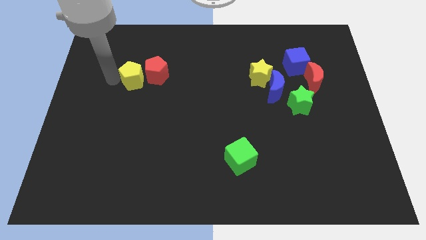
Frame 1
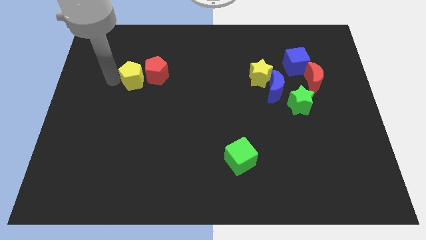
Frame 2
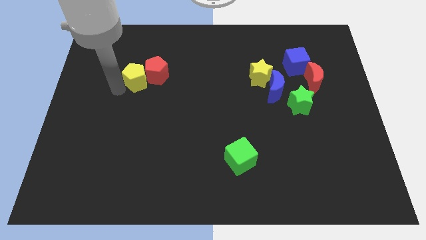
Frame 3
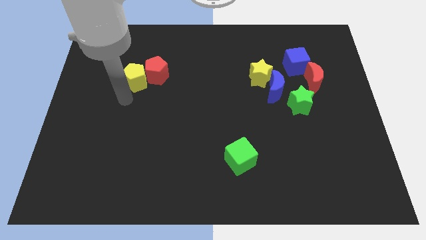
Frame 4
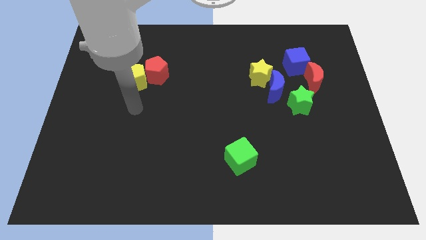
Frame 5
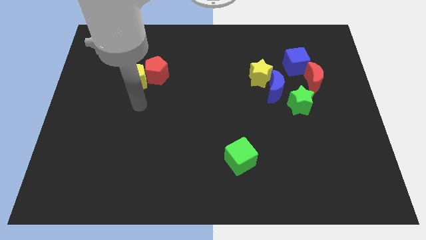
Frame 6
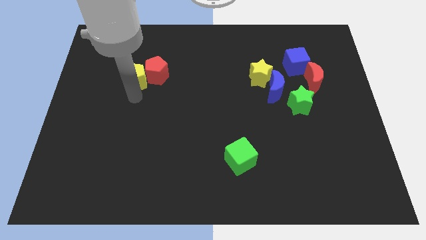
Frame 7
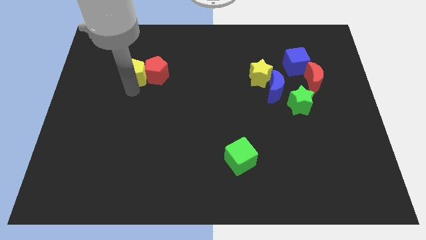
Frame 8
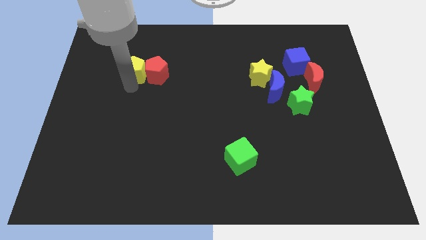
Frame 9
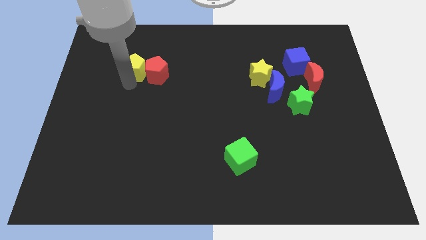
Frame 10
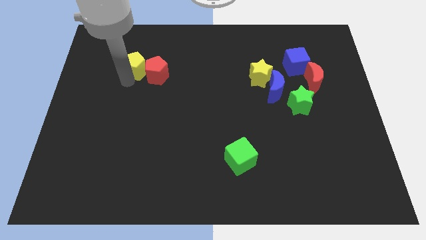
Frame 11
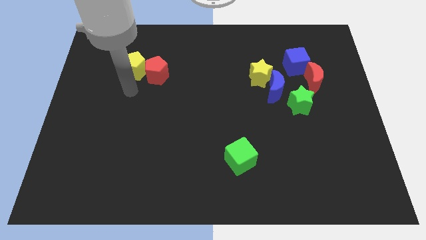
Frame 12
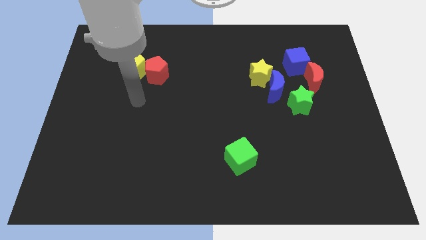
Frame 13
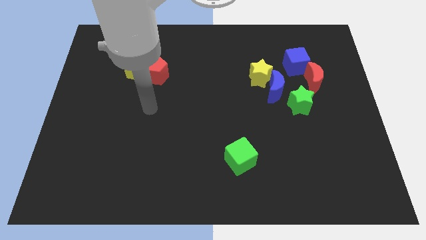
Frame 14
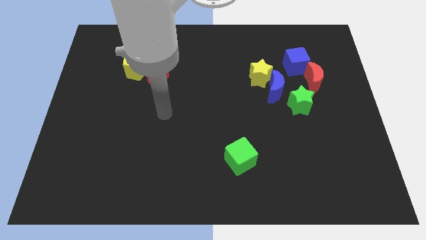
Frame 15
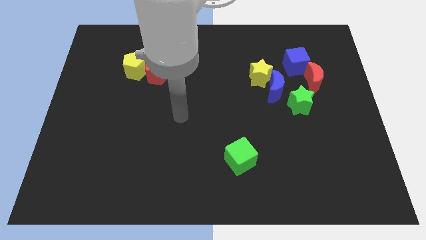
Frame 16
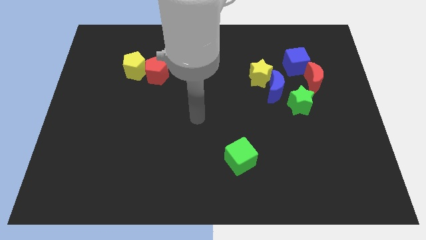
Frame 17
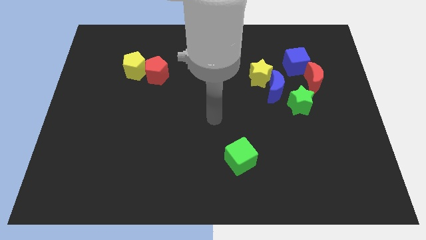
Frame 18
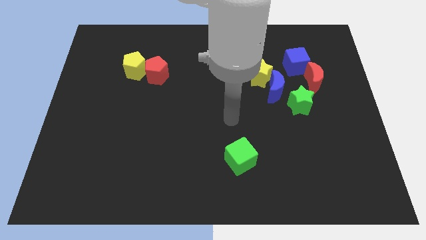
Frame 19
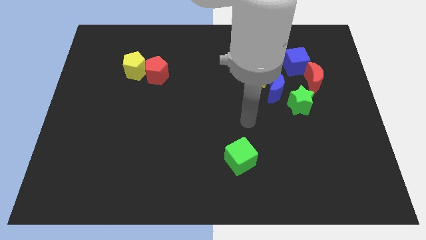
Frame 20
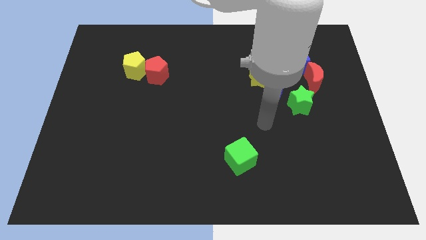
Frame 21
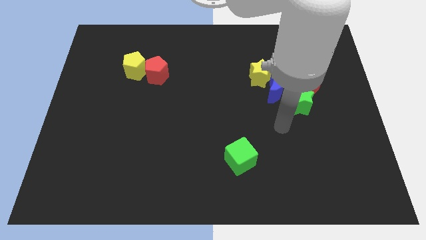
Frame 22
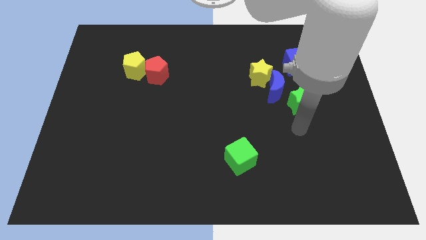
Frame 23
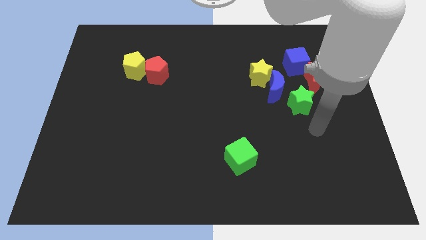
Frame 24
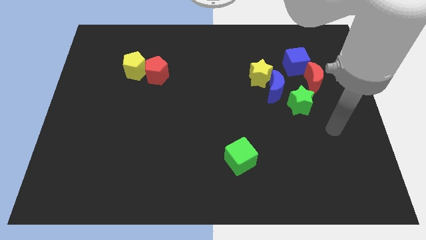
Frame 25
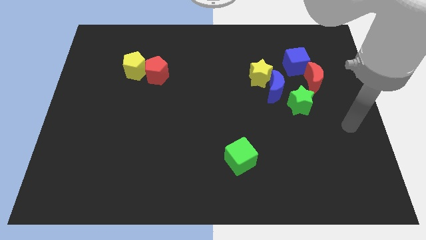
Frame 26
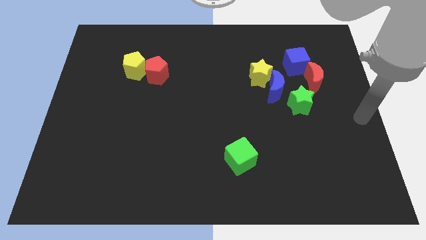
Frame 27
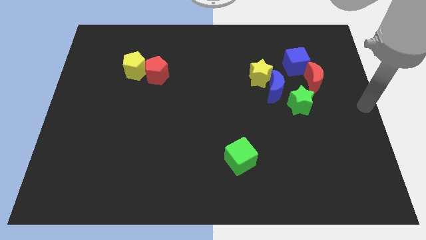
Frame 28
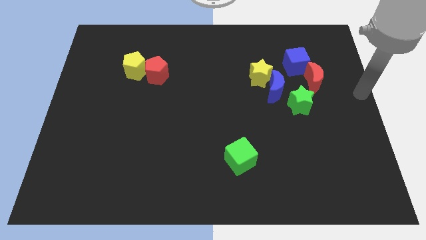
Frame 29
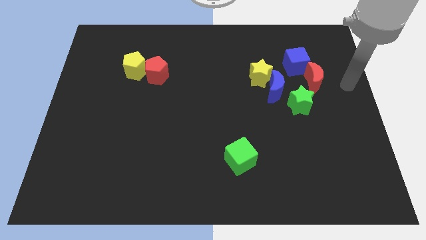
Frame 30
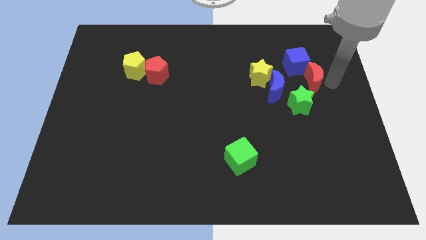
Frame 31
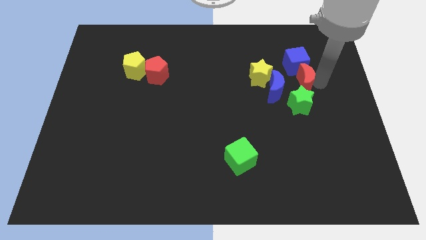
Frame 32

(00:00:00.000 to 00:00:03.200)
place the arm right to the red moon

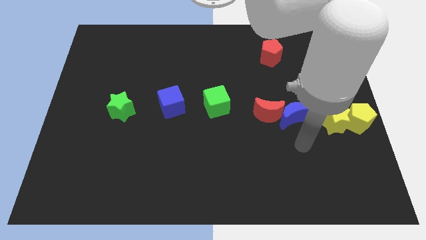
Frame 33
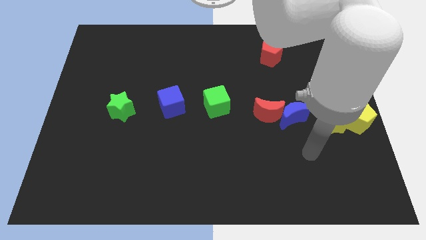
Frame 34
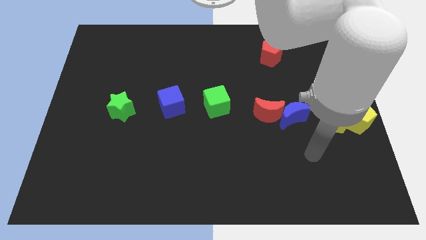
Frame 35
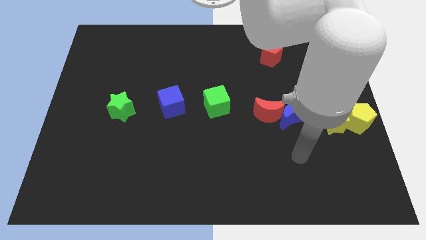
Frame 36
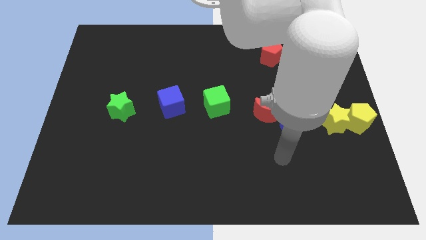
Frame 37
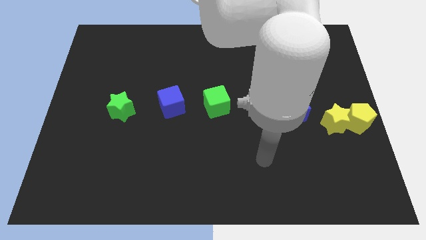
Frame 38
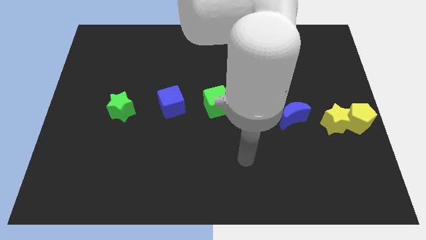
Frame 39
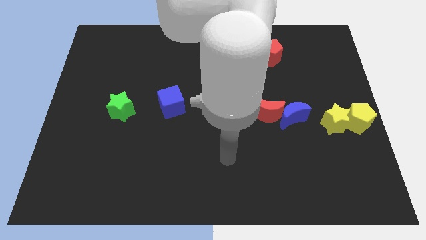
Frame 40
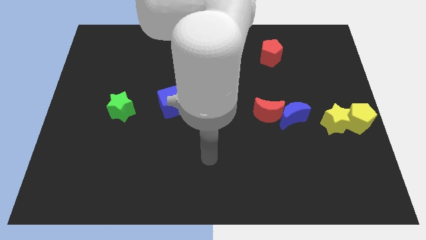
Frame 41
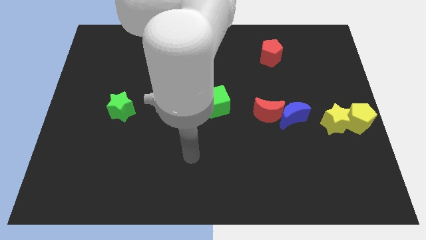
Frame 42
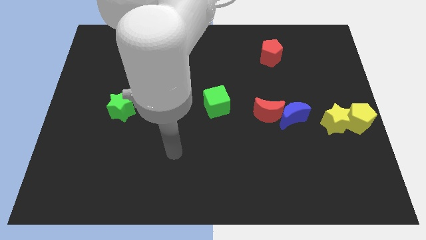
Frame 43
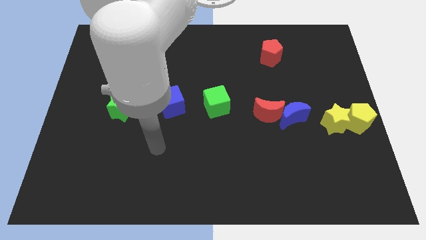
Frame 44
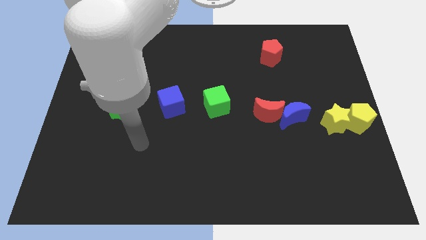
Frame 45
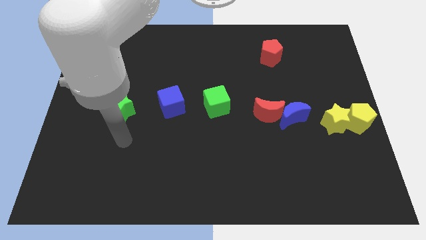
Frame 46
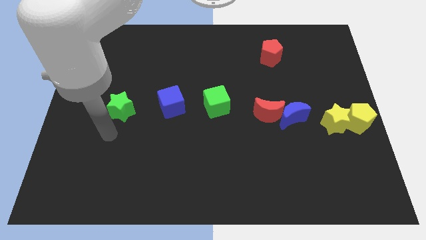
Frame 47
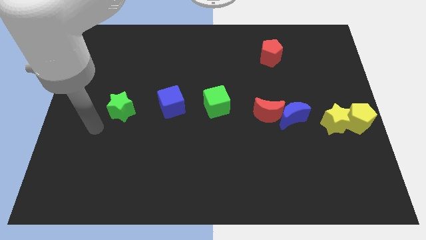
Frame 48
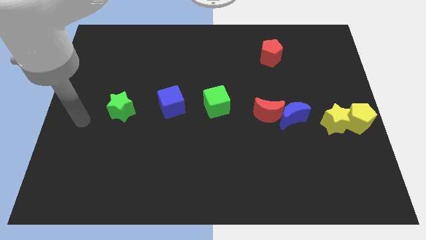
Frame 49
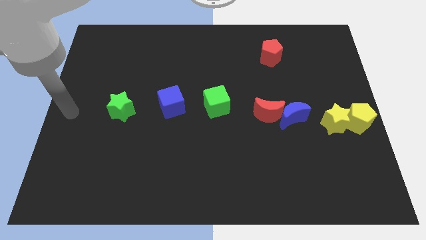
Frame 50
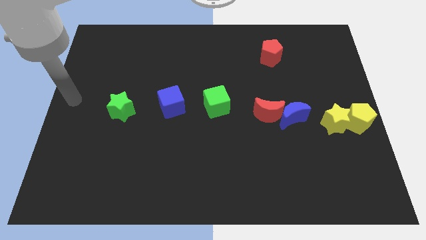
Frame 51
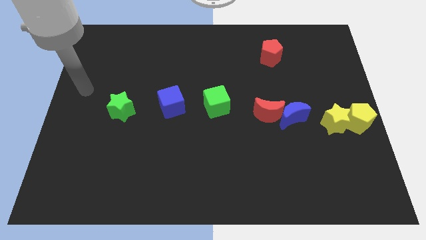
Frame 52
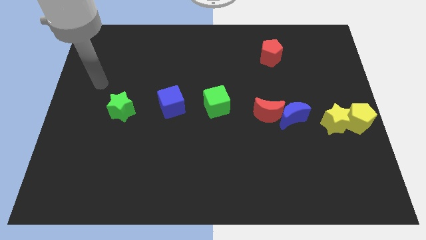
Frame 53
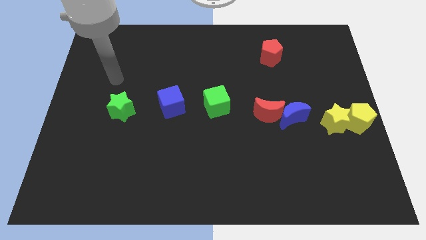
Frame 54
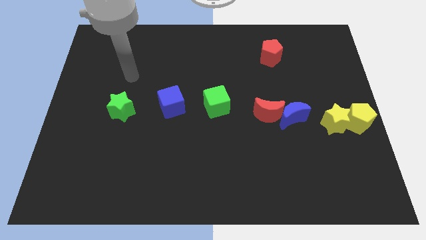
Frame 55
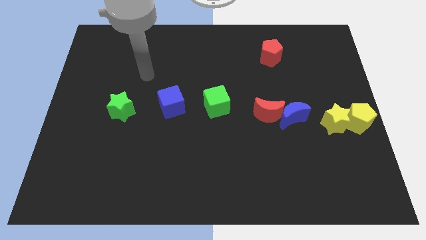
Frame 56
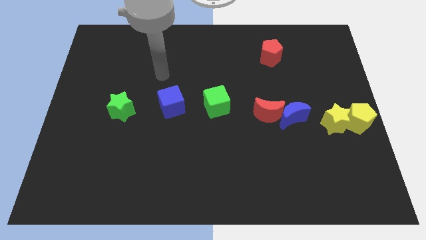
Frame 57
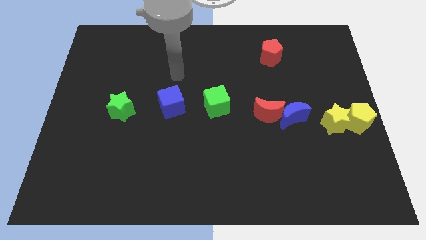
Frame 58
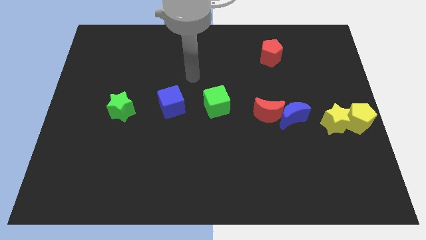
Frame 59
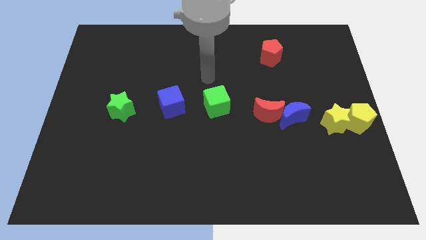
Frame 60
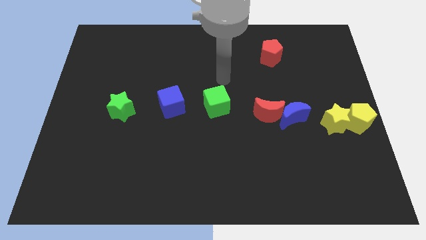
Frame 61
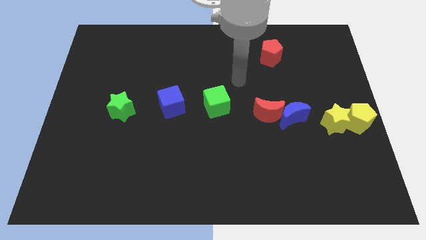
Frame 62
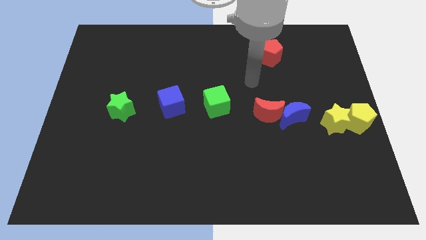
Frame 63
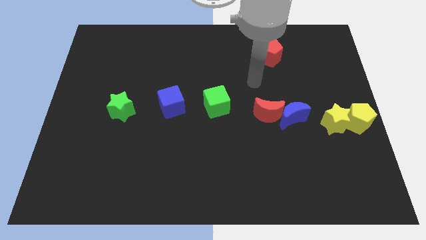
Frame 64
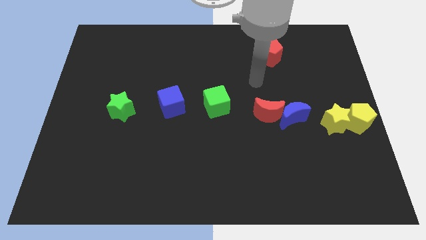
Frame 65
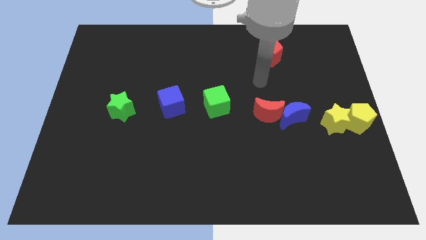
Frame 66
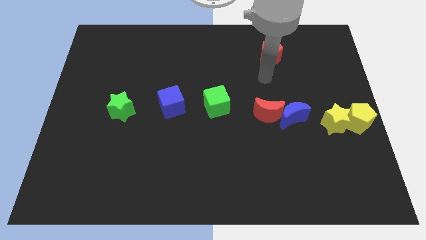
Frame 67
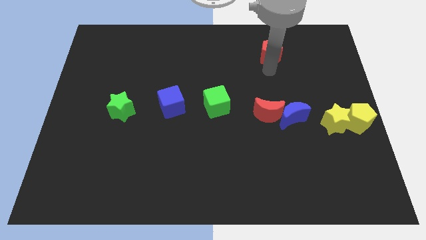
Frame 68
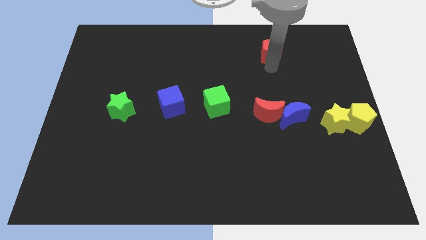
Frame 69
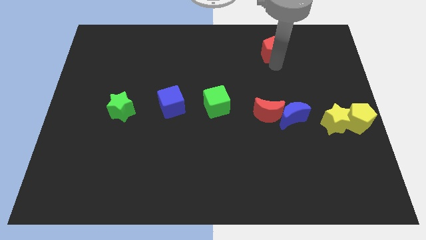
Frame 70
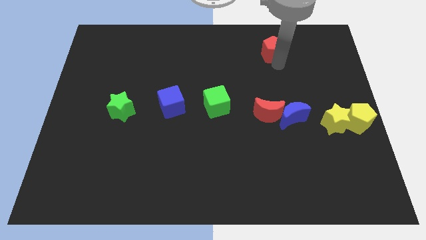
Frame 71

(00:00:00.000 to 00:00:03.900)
move your arm below the red pentagon

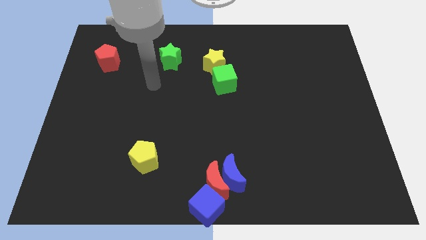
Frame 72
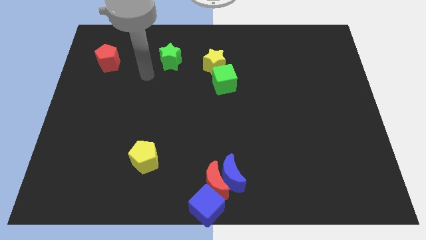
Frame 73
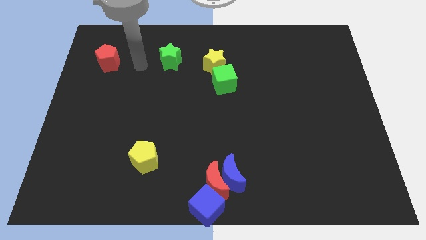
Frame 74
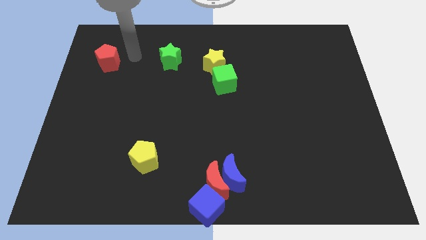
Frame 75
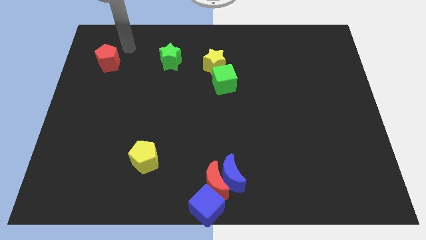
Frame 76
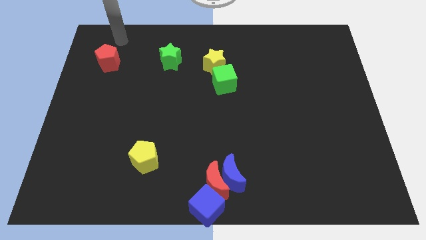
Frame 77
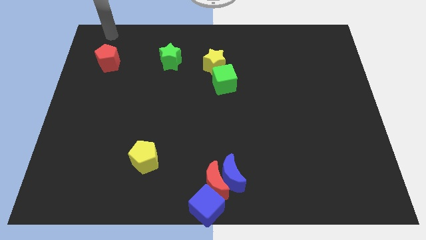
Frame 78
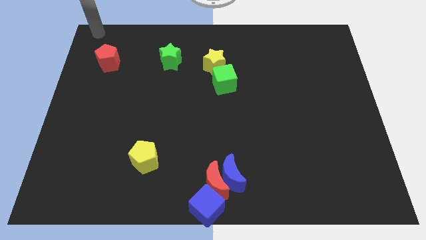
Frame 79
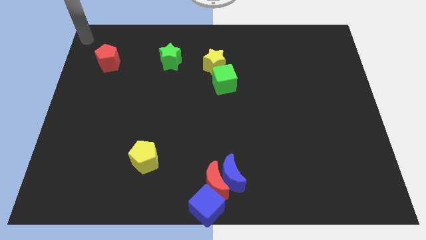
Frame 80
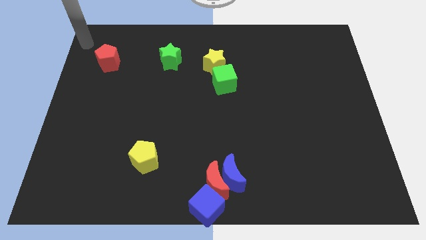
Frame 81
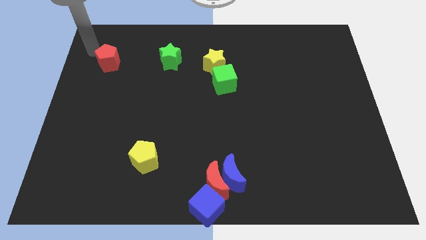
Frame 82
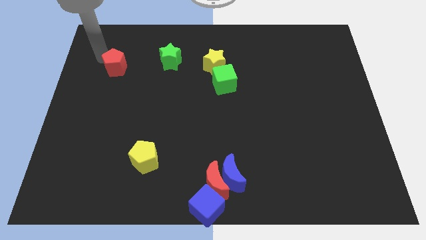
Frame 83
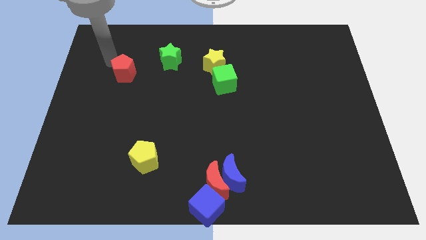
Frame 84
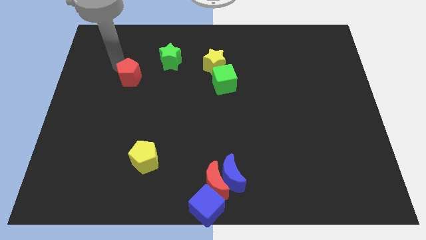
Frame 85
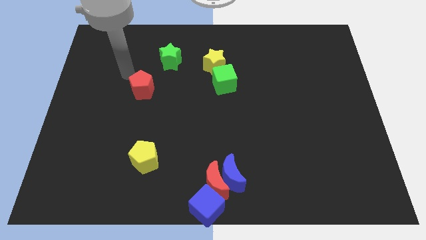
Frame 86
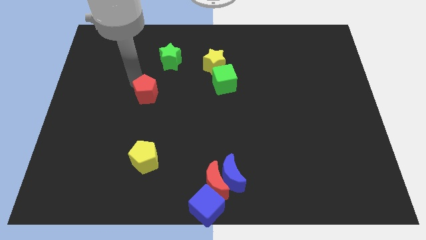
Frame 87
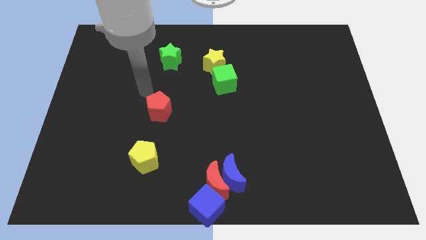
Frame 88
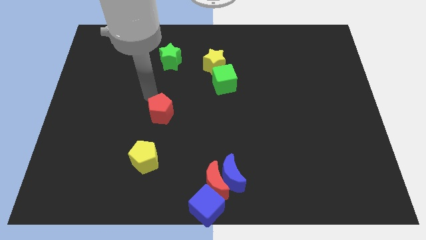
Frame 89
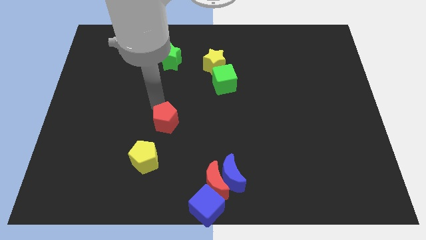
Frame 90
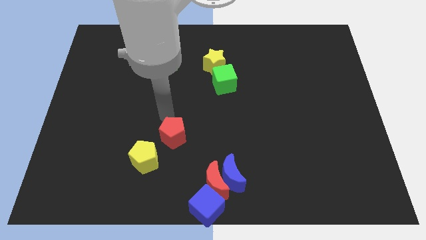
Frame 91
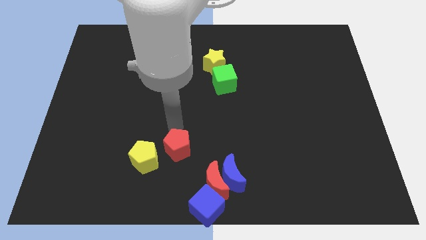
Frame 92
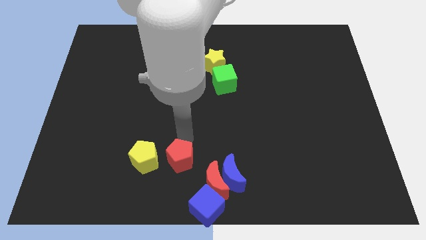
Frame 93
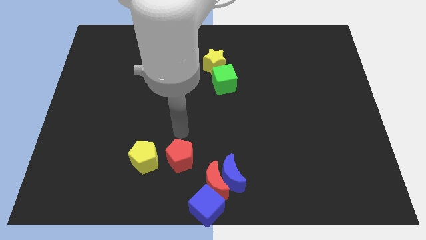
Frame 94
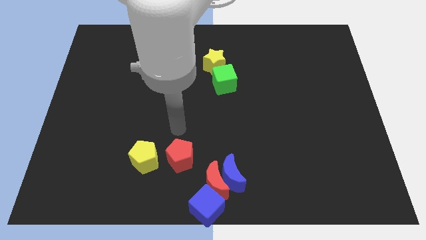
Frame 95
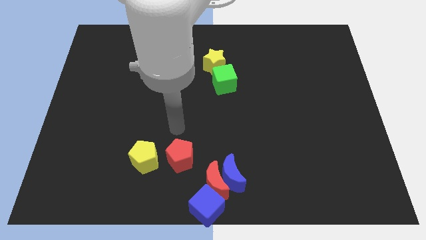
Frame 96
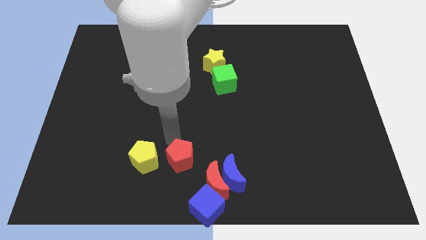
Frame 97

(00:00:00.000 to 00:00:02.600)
move the red pentagon to the right side of the yellow pentagon
